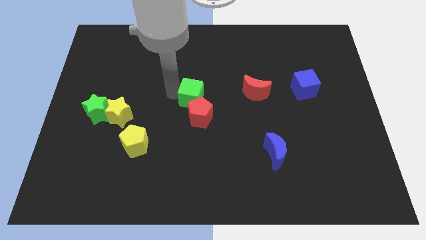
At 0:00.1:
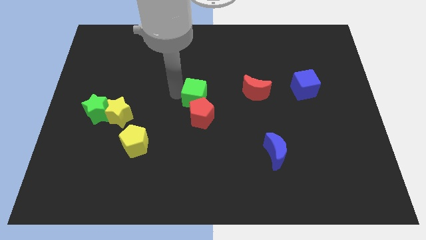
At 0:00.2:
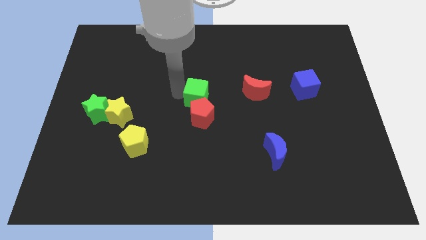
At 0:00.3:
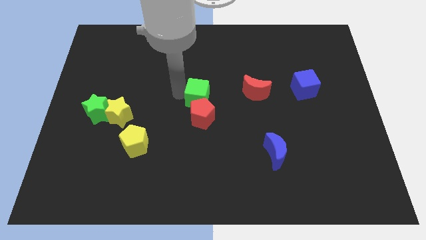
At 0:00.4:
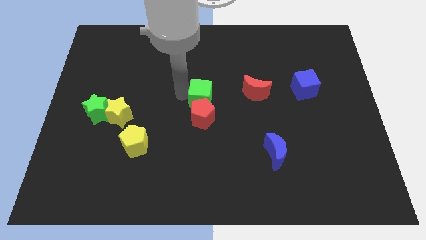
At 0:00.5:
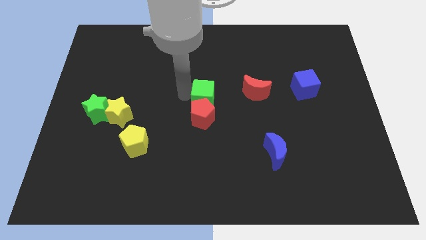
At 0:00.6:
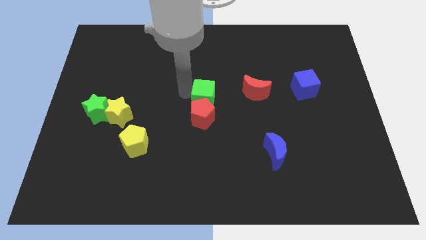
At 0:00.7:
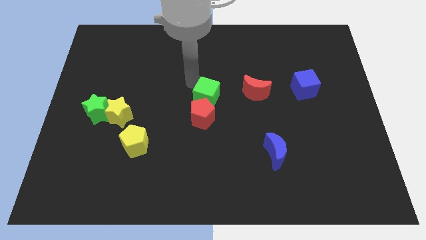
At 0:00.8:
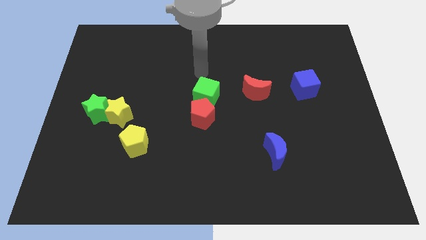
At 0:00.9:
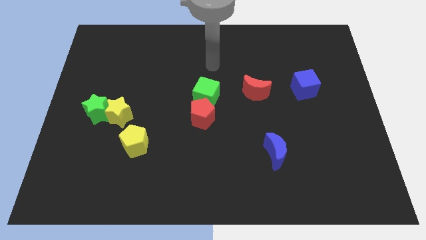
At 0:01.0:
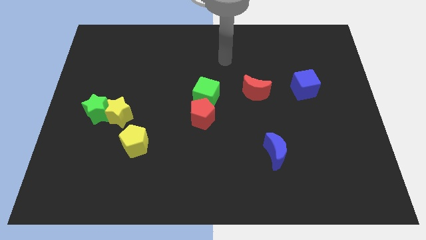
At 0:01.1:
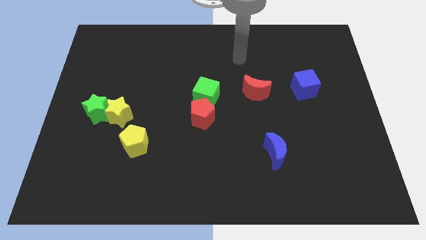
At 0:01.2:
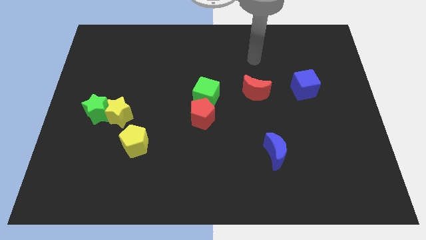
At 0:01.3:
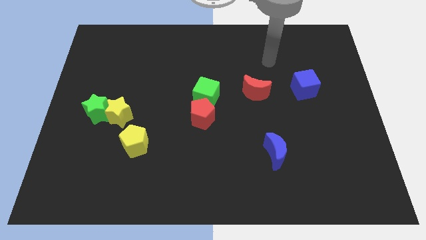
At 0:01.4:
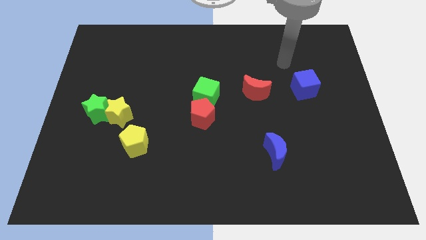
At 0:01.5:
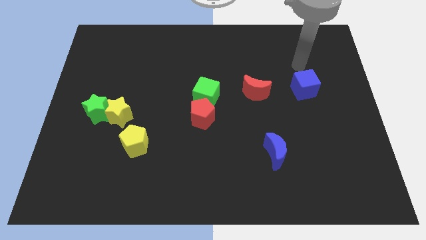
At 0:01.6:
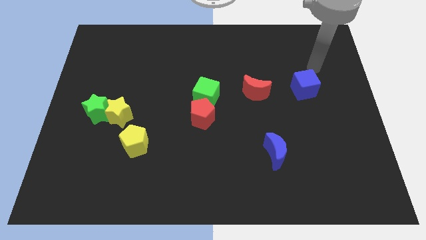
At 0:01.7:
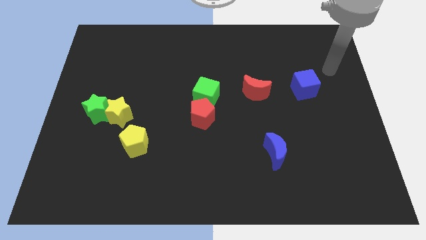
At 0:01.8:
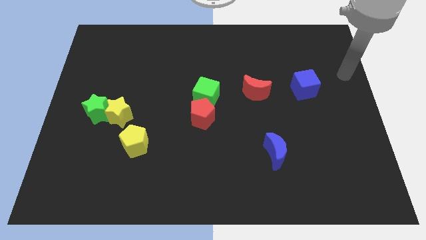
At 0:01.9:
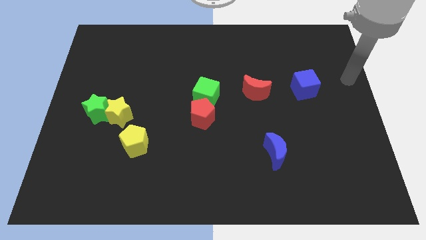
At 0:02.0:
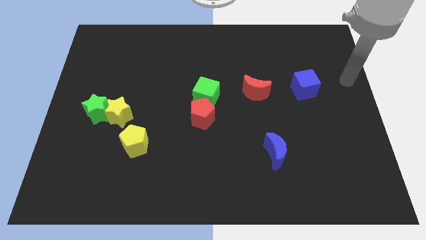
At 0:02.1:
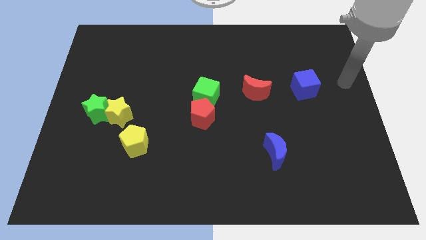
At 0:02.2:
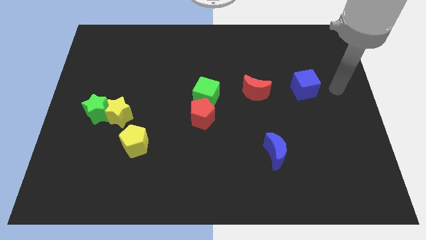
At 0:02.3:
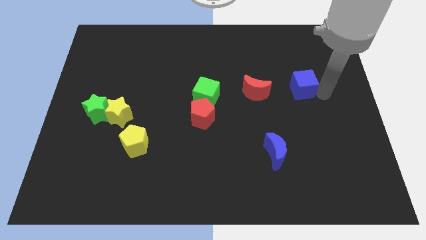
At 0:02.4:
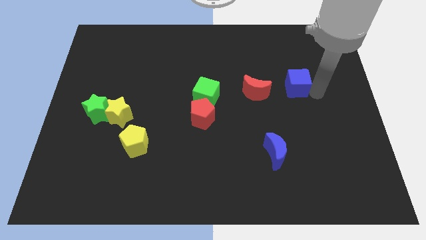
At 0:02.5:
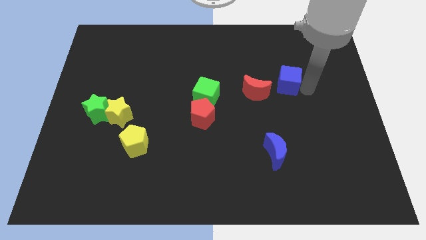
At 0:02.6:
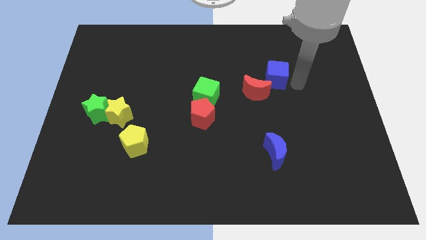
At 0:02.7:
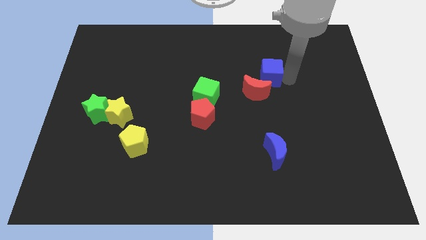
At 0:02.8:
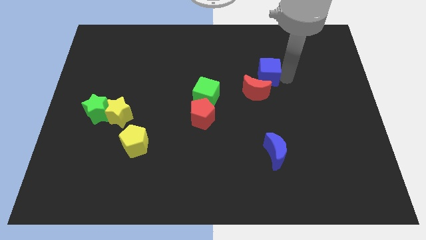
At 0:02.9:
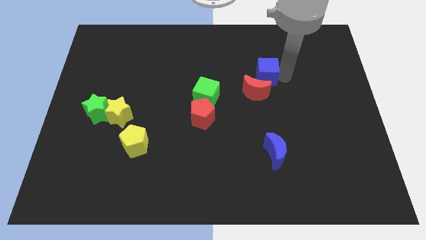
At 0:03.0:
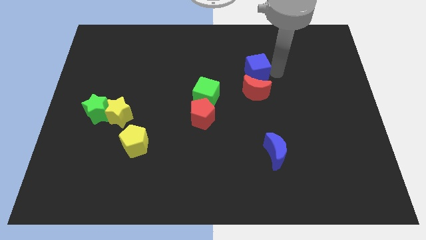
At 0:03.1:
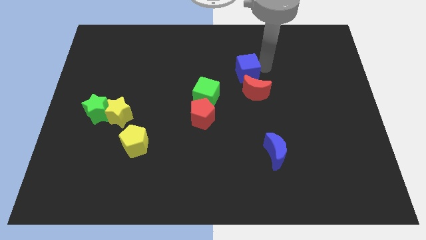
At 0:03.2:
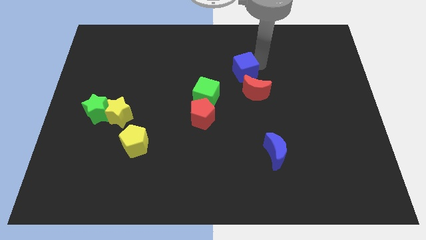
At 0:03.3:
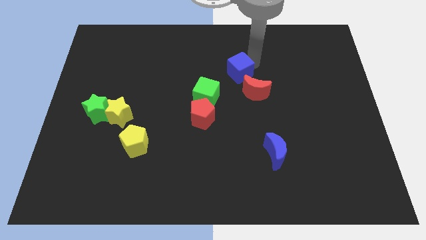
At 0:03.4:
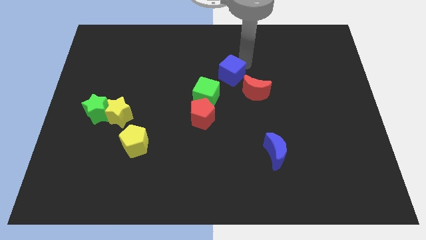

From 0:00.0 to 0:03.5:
push the blue cube to the top right side of the green cube

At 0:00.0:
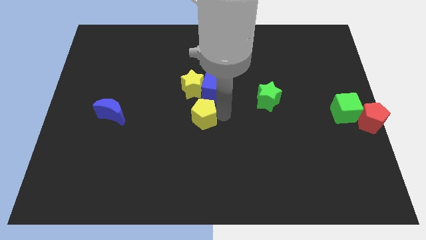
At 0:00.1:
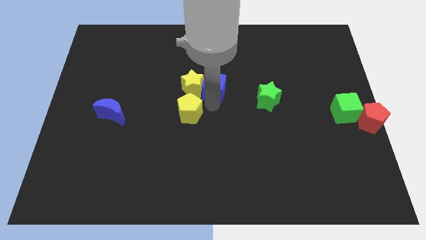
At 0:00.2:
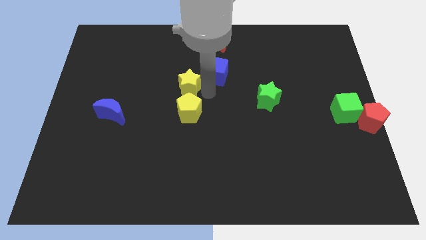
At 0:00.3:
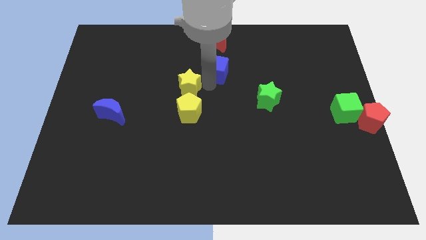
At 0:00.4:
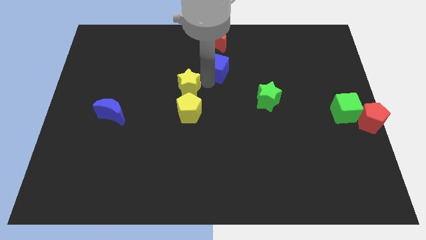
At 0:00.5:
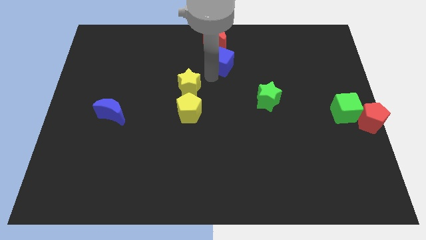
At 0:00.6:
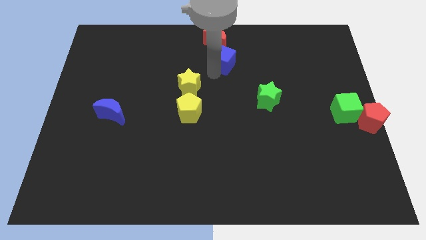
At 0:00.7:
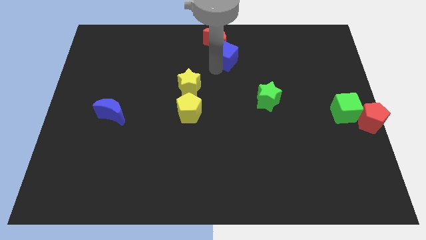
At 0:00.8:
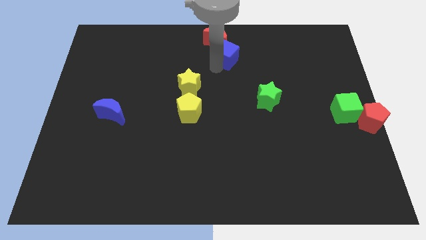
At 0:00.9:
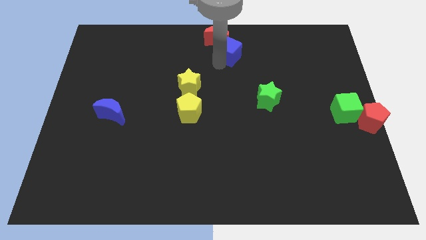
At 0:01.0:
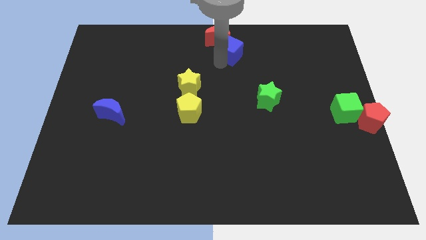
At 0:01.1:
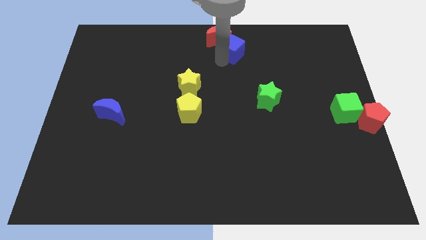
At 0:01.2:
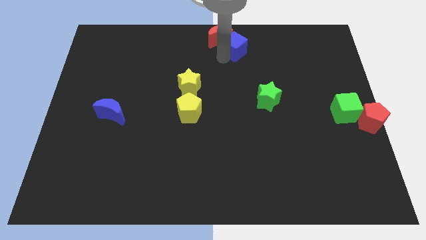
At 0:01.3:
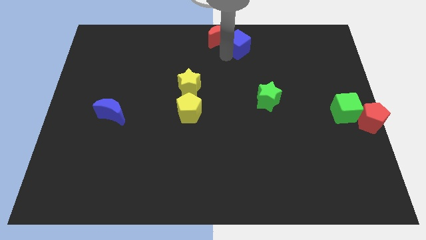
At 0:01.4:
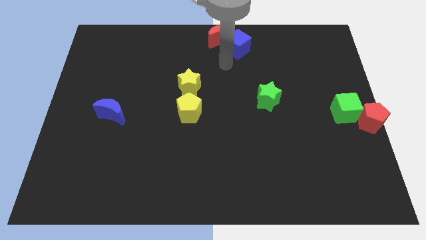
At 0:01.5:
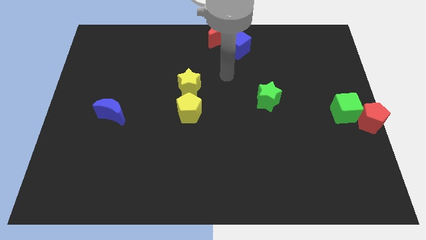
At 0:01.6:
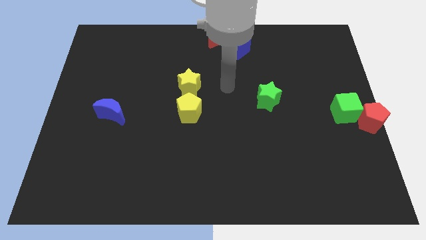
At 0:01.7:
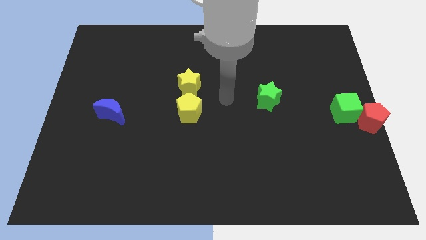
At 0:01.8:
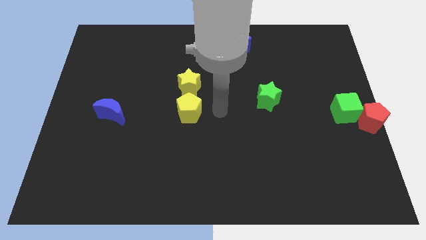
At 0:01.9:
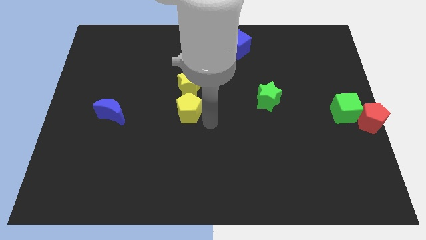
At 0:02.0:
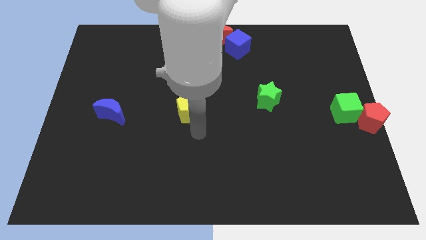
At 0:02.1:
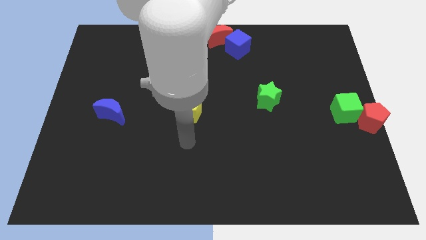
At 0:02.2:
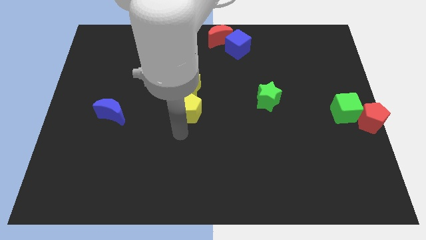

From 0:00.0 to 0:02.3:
move the blue cube to the bottom right to the red crescent

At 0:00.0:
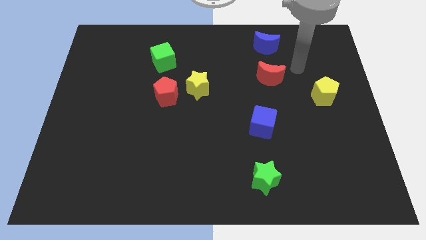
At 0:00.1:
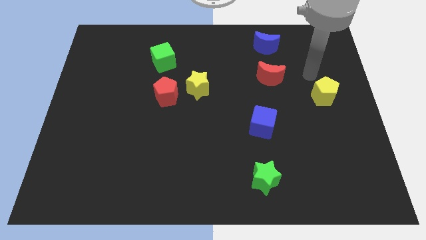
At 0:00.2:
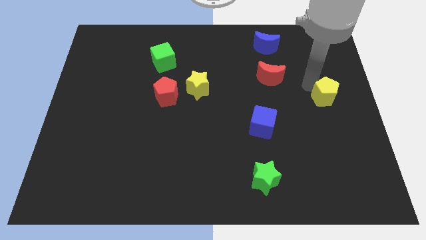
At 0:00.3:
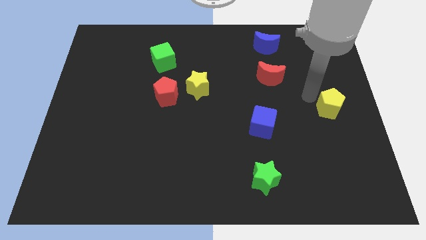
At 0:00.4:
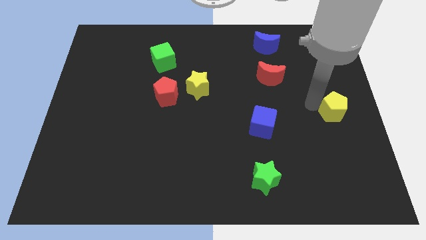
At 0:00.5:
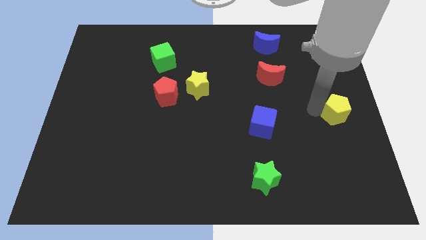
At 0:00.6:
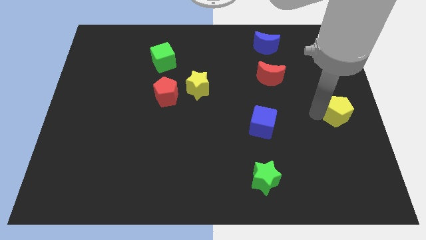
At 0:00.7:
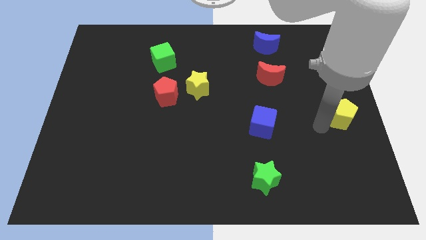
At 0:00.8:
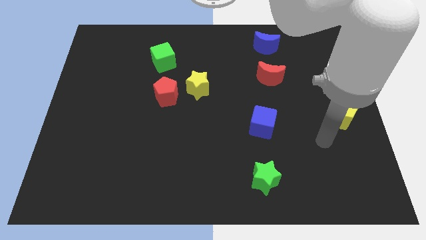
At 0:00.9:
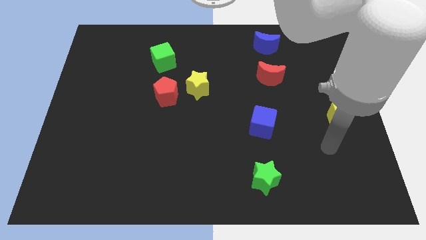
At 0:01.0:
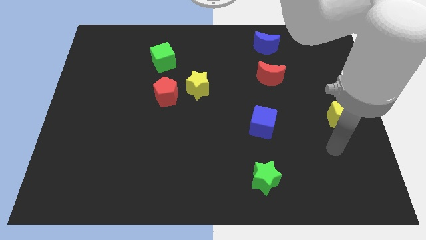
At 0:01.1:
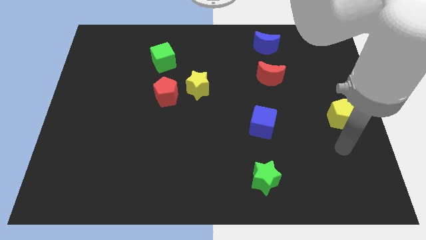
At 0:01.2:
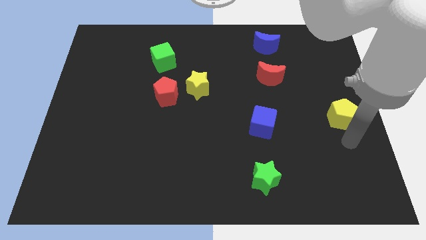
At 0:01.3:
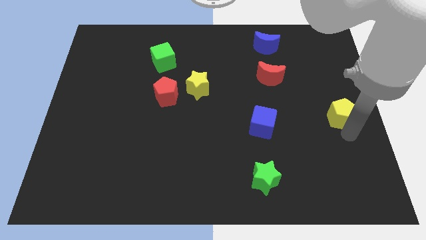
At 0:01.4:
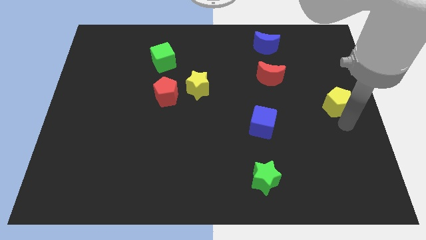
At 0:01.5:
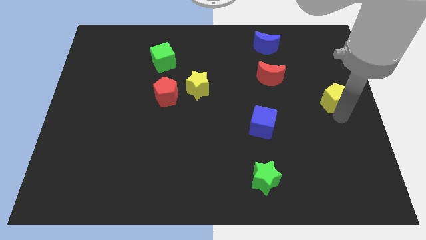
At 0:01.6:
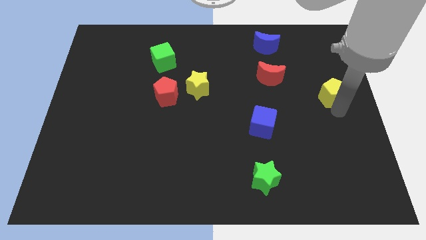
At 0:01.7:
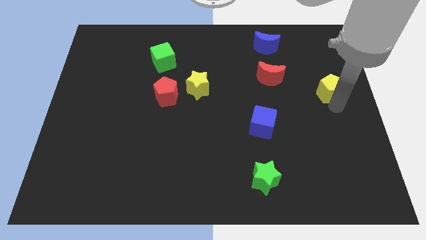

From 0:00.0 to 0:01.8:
put the yellow pentagon parallel to the yellow star

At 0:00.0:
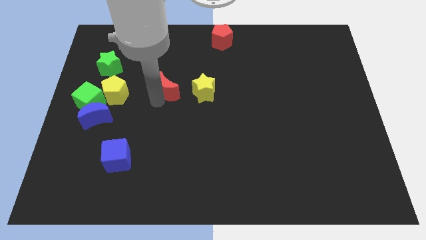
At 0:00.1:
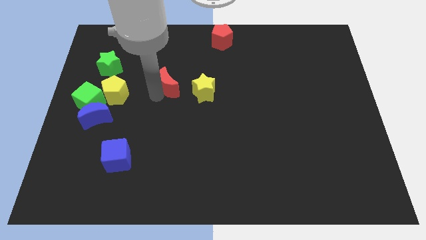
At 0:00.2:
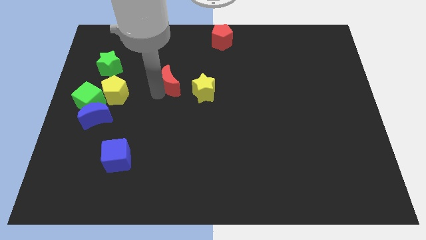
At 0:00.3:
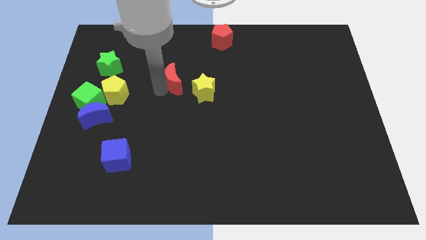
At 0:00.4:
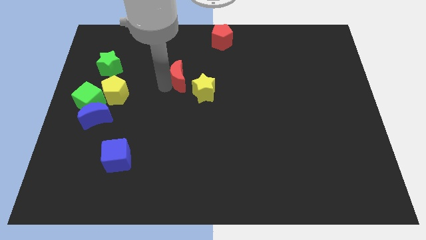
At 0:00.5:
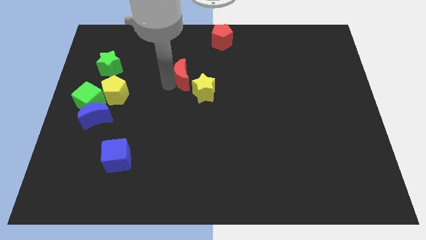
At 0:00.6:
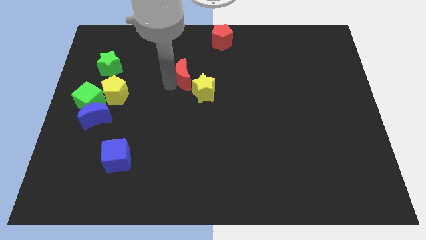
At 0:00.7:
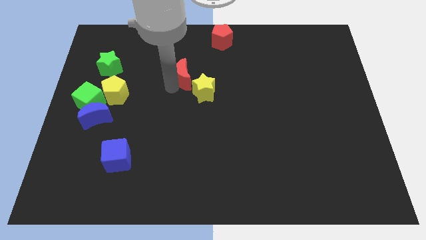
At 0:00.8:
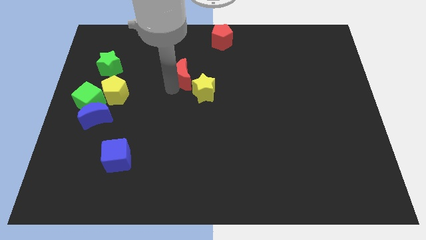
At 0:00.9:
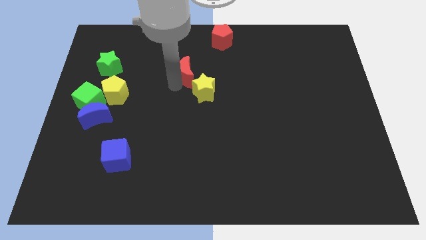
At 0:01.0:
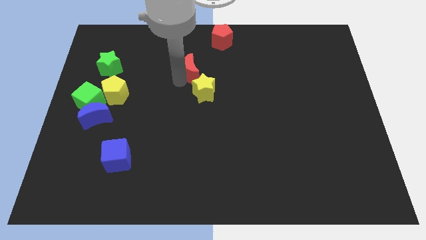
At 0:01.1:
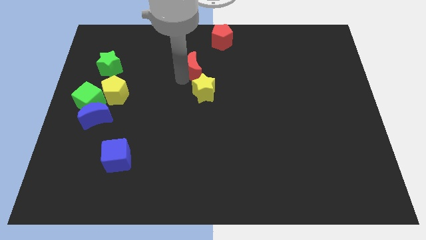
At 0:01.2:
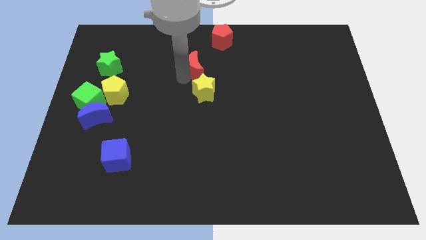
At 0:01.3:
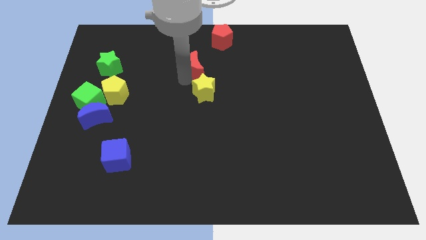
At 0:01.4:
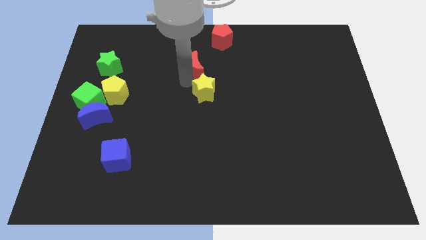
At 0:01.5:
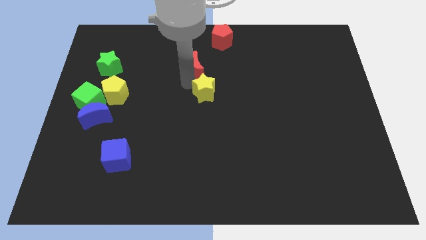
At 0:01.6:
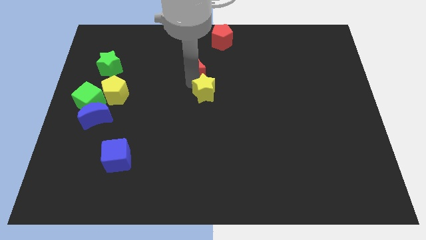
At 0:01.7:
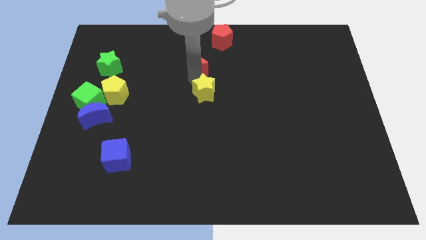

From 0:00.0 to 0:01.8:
place the red crescent to the top of the yellow star vertically
